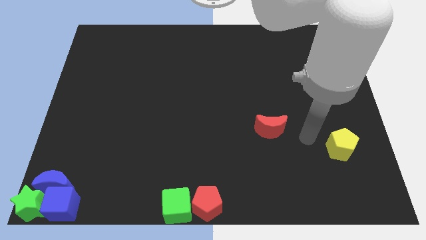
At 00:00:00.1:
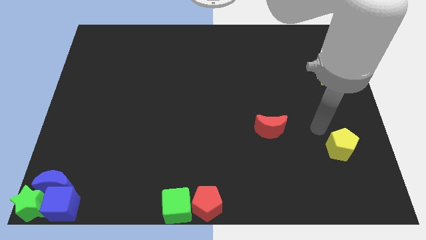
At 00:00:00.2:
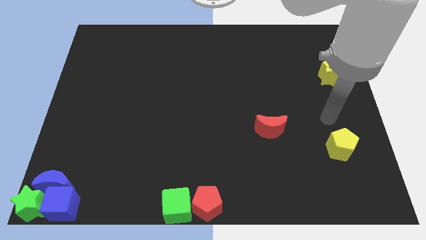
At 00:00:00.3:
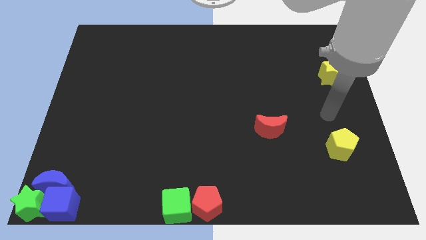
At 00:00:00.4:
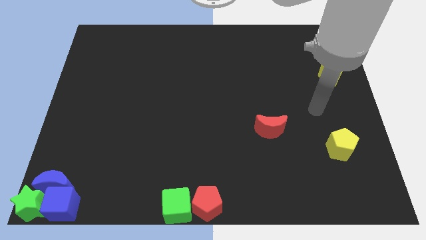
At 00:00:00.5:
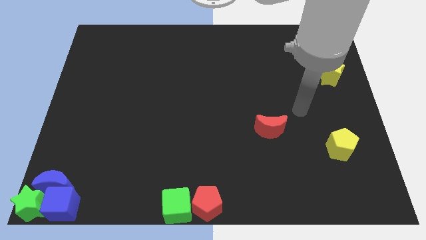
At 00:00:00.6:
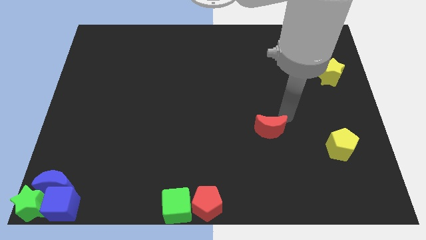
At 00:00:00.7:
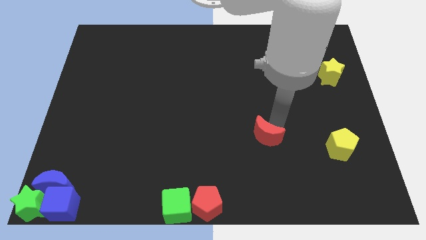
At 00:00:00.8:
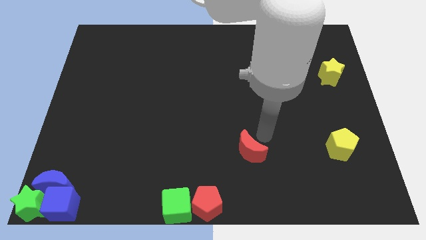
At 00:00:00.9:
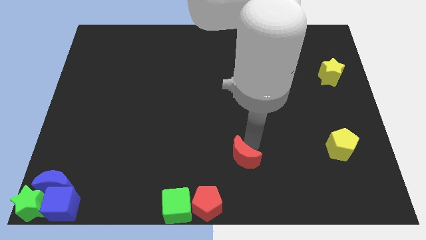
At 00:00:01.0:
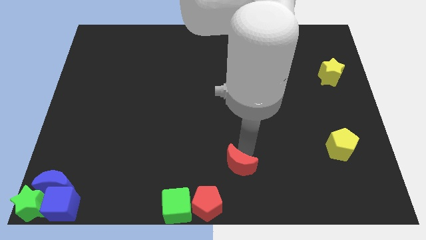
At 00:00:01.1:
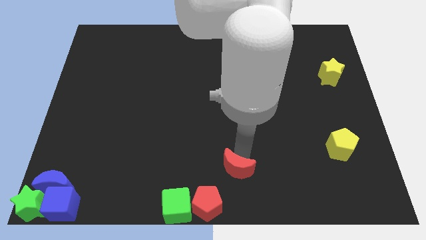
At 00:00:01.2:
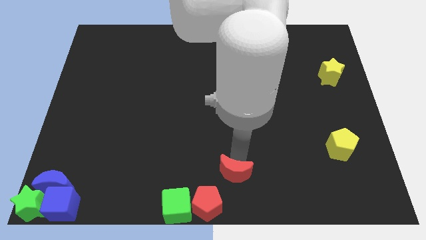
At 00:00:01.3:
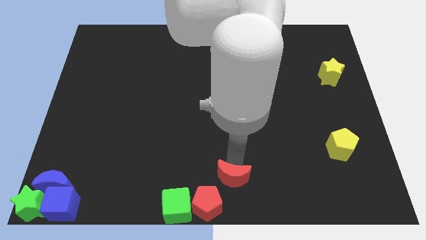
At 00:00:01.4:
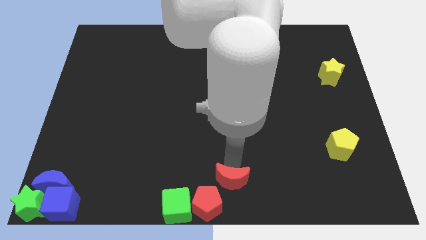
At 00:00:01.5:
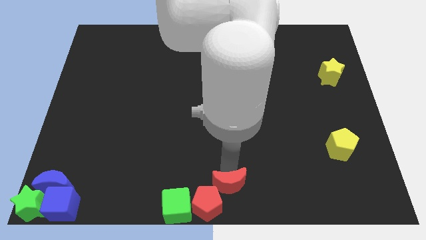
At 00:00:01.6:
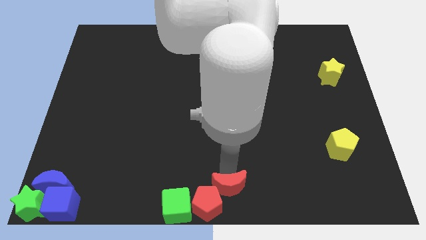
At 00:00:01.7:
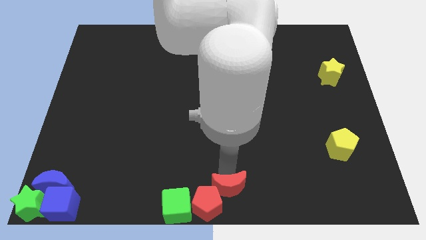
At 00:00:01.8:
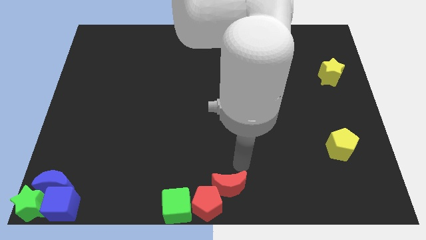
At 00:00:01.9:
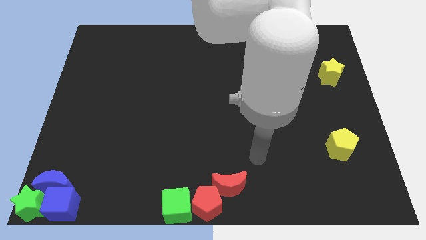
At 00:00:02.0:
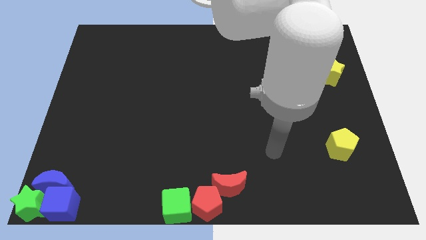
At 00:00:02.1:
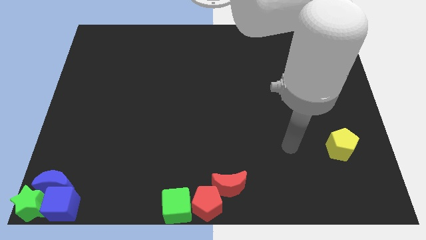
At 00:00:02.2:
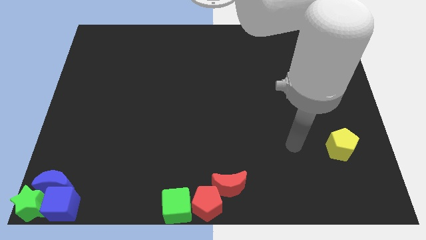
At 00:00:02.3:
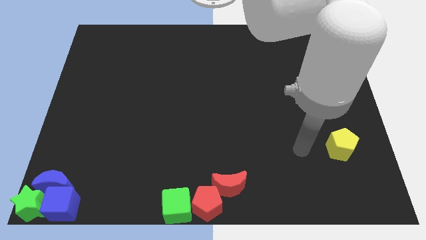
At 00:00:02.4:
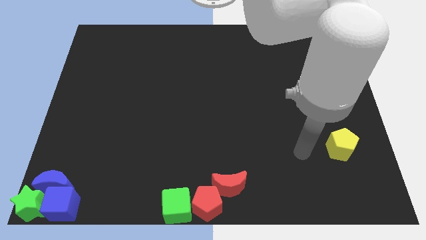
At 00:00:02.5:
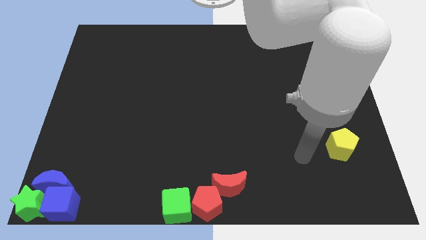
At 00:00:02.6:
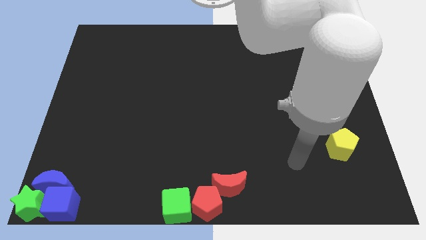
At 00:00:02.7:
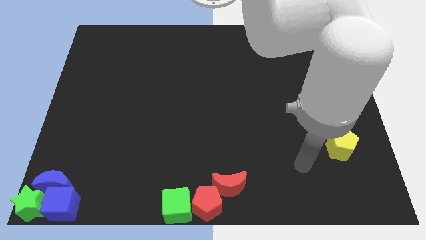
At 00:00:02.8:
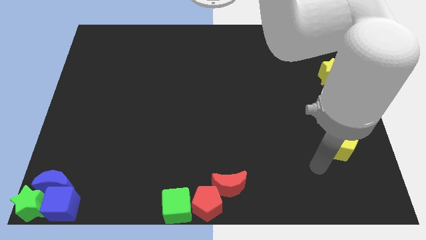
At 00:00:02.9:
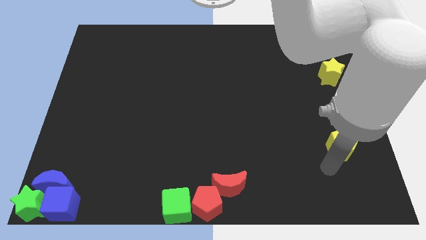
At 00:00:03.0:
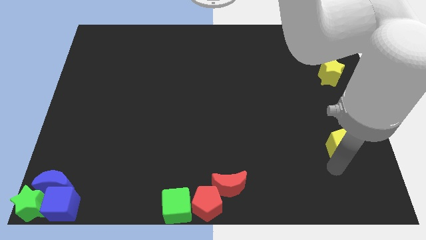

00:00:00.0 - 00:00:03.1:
place the red moon to the top of the red pentagon

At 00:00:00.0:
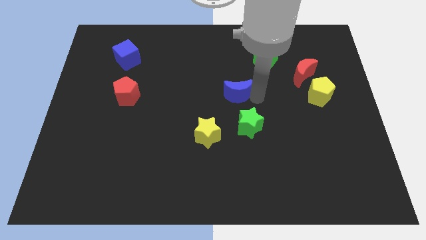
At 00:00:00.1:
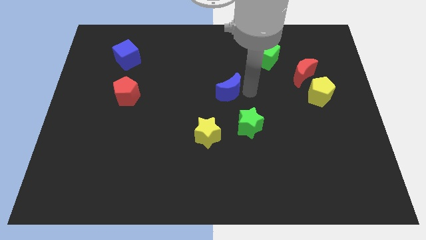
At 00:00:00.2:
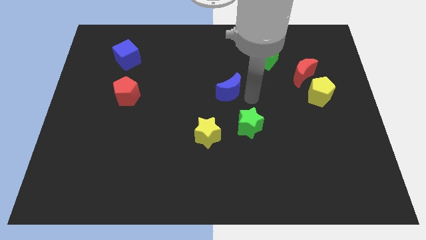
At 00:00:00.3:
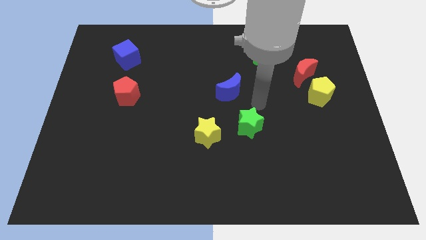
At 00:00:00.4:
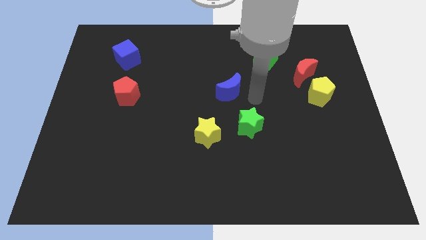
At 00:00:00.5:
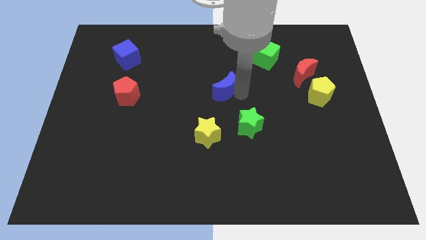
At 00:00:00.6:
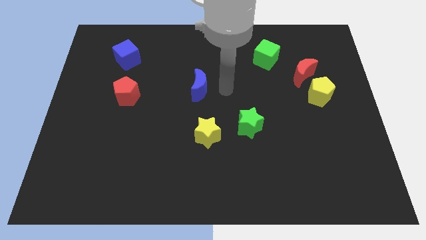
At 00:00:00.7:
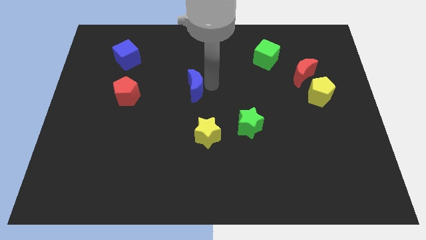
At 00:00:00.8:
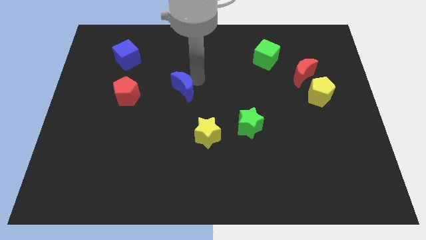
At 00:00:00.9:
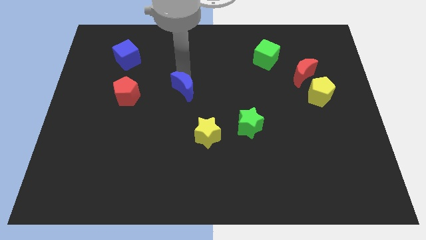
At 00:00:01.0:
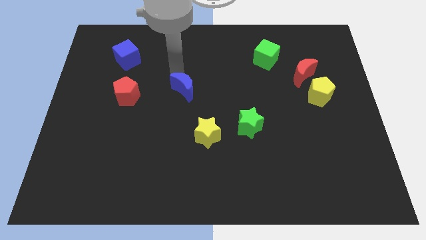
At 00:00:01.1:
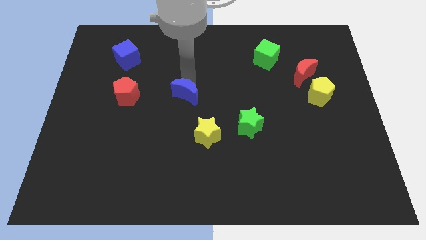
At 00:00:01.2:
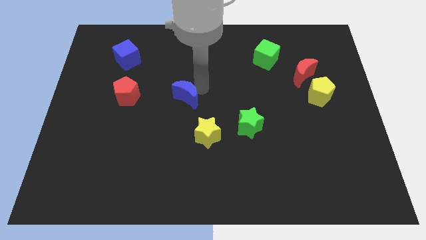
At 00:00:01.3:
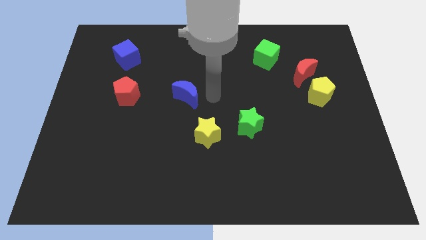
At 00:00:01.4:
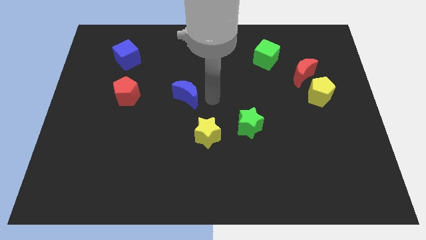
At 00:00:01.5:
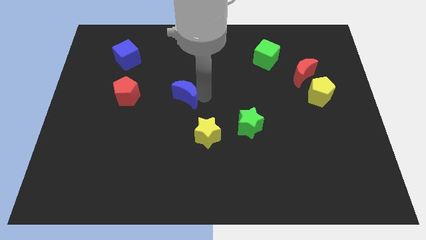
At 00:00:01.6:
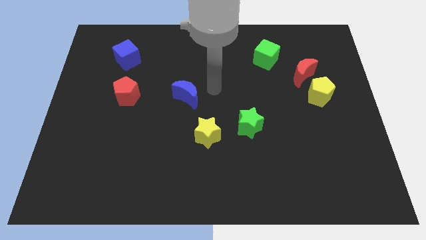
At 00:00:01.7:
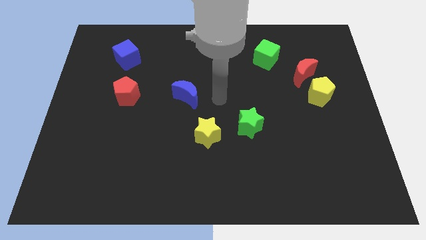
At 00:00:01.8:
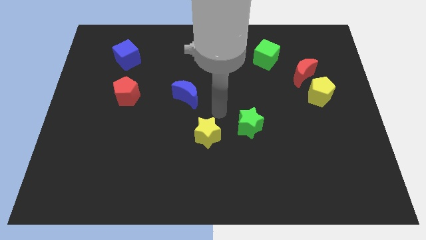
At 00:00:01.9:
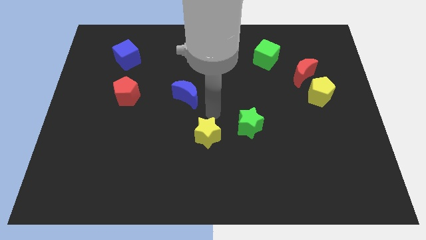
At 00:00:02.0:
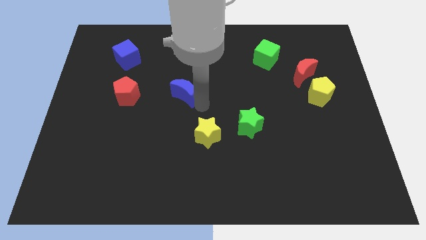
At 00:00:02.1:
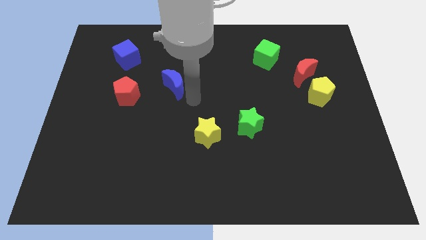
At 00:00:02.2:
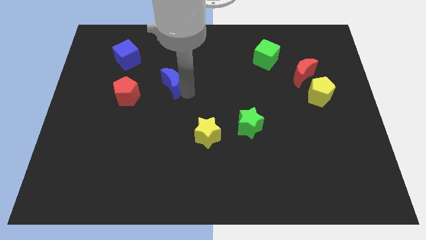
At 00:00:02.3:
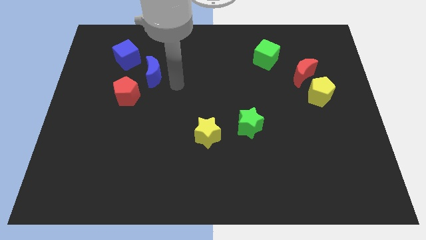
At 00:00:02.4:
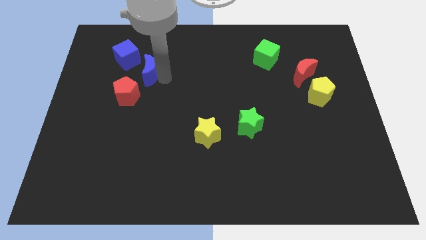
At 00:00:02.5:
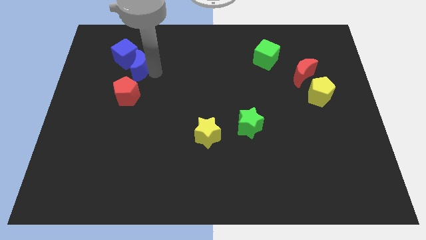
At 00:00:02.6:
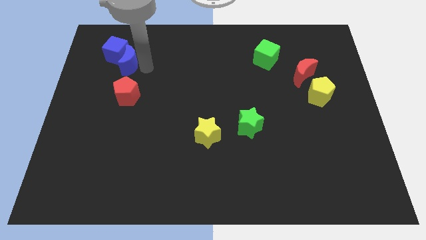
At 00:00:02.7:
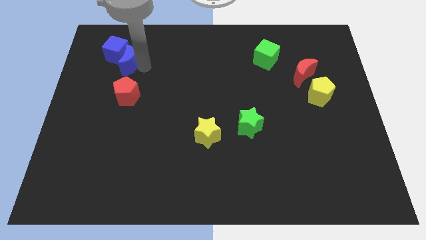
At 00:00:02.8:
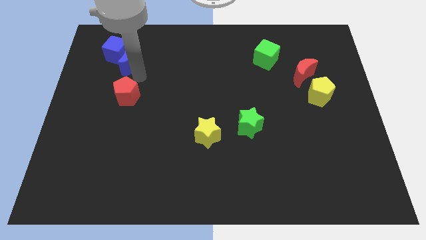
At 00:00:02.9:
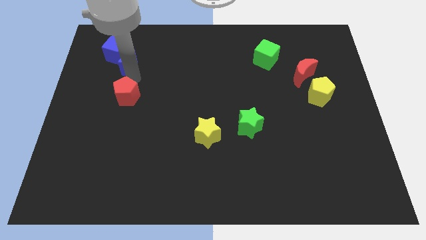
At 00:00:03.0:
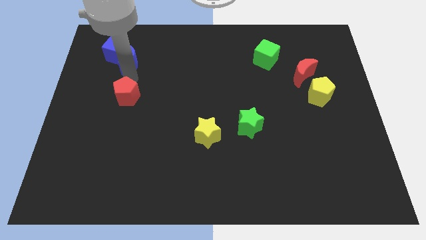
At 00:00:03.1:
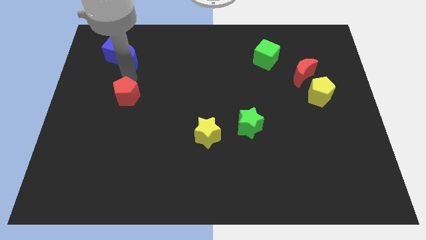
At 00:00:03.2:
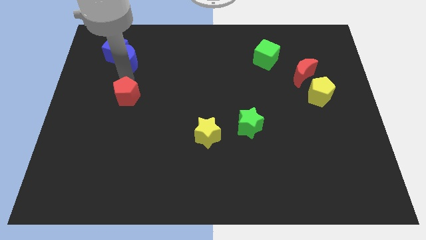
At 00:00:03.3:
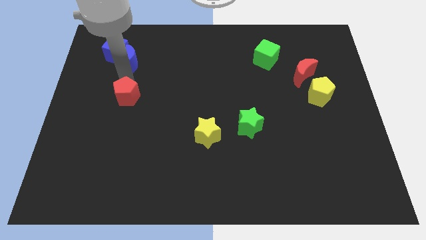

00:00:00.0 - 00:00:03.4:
push the blue crescent into the blue cube

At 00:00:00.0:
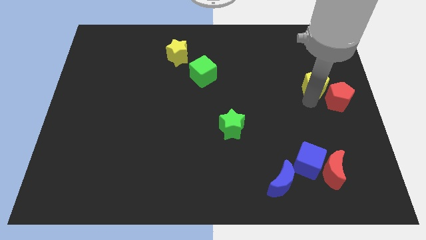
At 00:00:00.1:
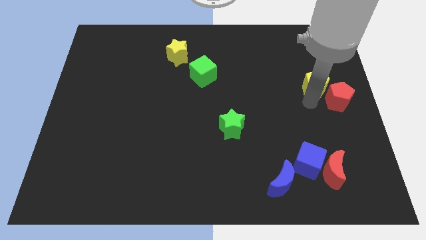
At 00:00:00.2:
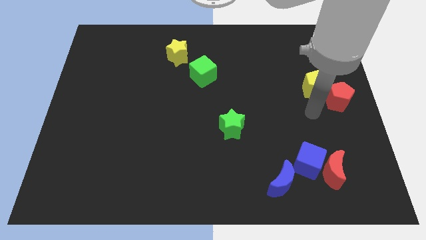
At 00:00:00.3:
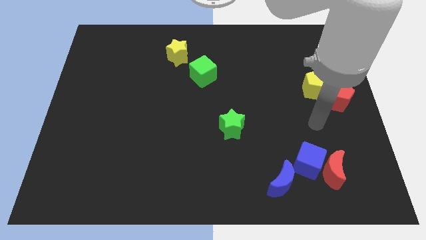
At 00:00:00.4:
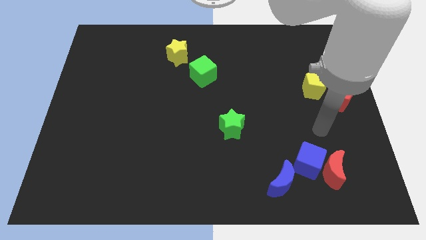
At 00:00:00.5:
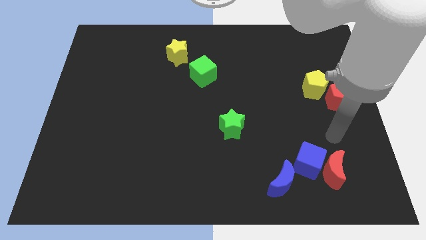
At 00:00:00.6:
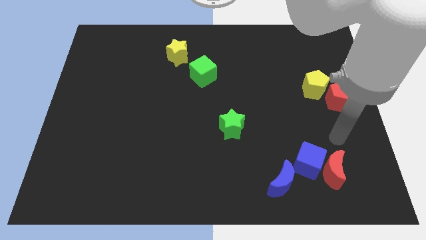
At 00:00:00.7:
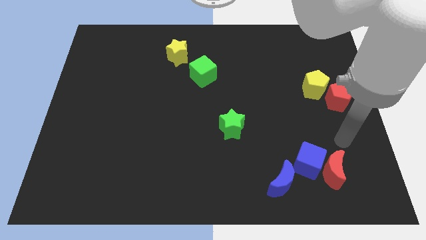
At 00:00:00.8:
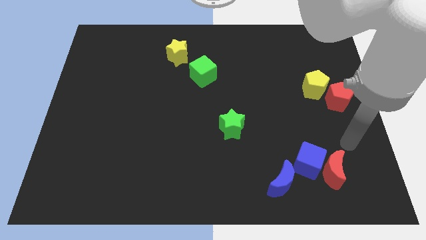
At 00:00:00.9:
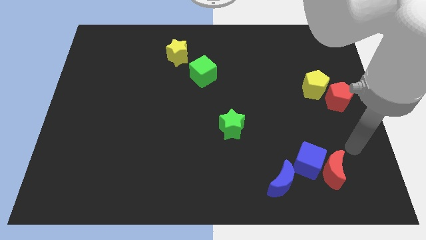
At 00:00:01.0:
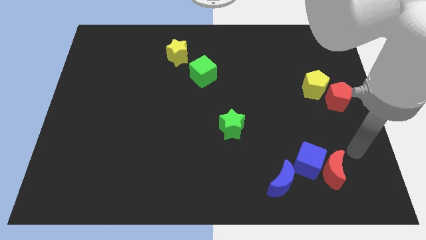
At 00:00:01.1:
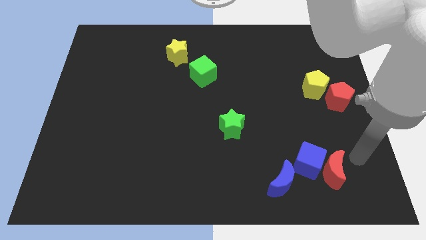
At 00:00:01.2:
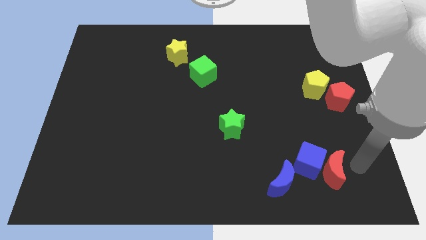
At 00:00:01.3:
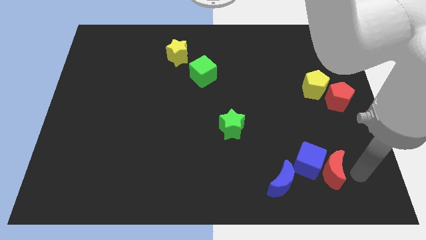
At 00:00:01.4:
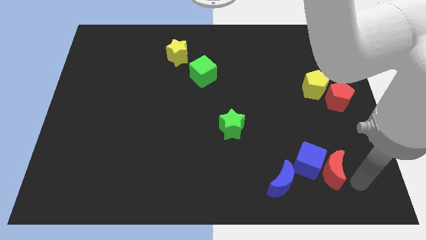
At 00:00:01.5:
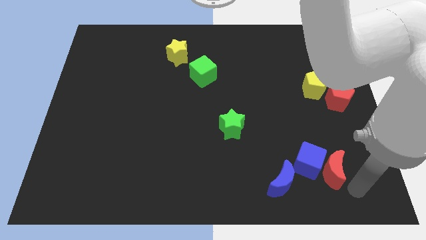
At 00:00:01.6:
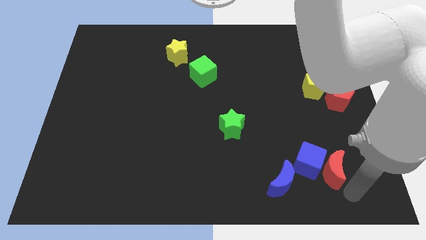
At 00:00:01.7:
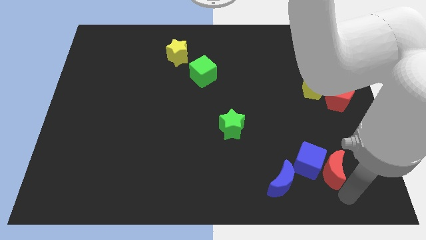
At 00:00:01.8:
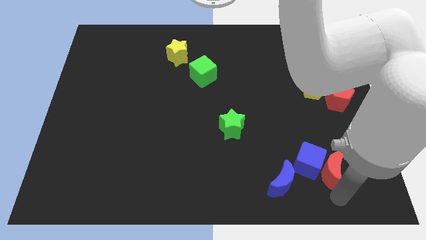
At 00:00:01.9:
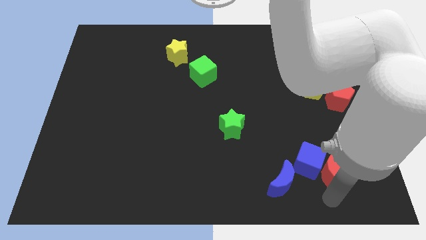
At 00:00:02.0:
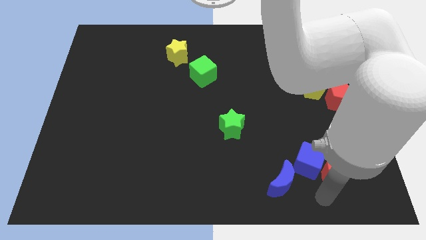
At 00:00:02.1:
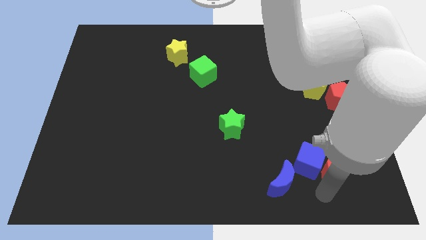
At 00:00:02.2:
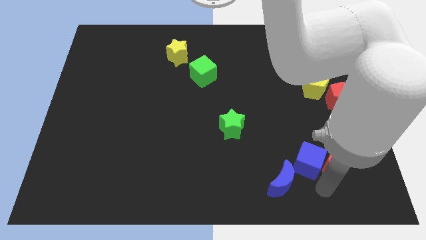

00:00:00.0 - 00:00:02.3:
slightly move the red half moon
